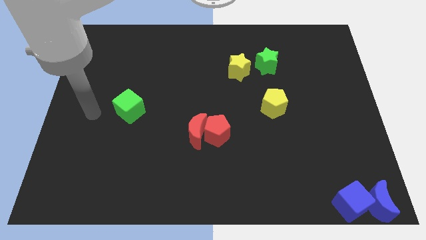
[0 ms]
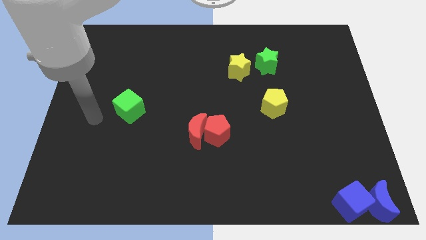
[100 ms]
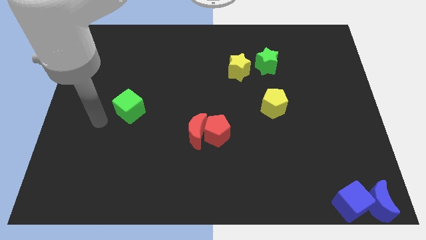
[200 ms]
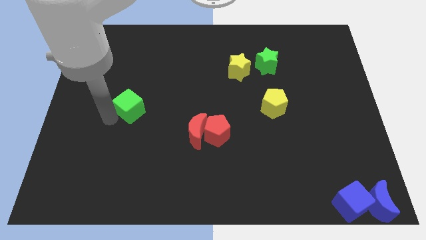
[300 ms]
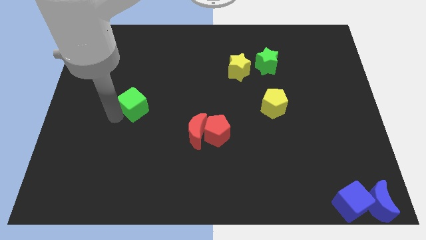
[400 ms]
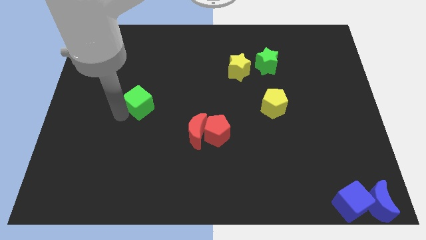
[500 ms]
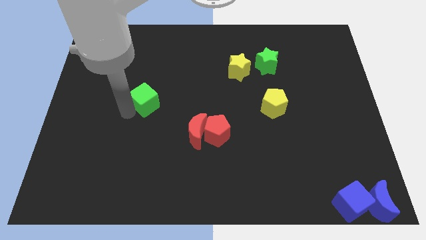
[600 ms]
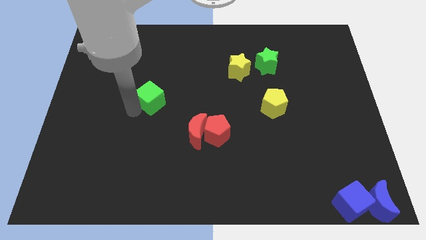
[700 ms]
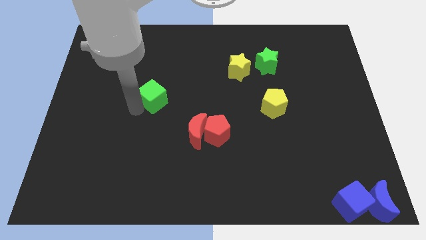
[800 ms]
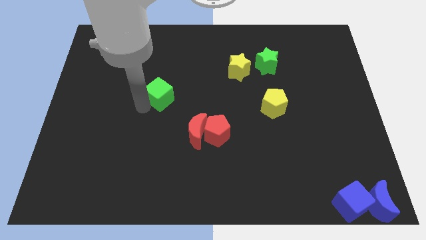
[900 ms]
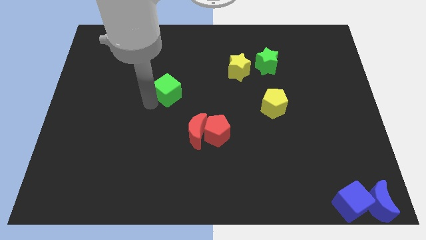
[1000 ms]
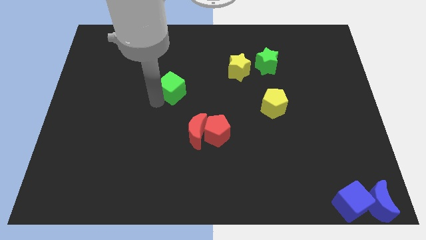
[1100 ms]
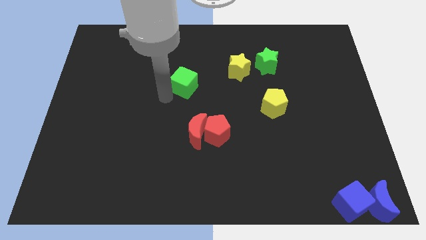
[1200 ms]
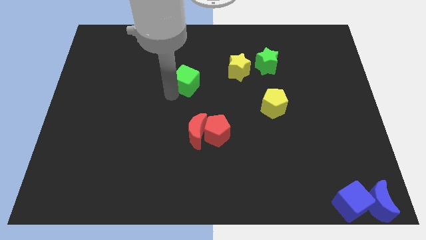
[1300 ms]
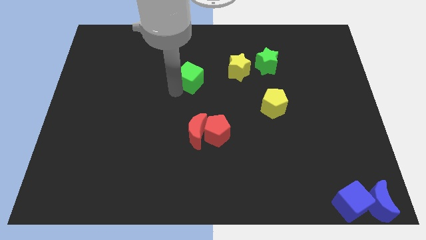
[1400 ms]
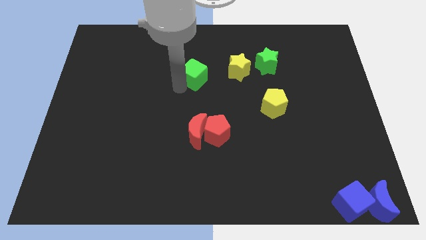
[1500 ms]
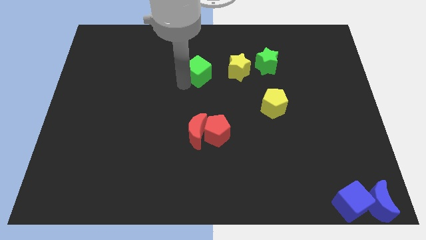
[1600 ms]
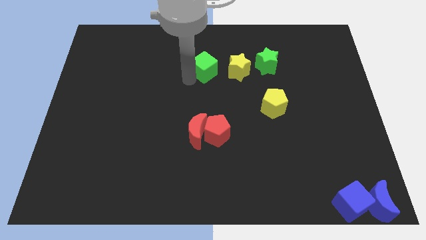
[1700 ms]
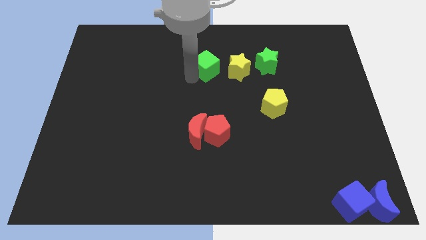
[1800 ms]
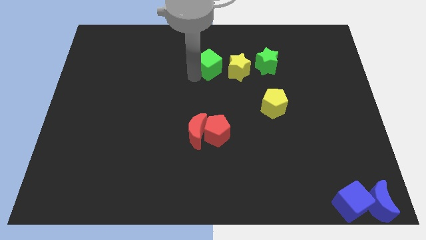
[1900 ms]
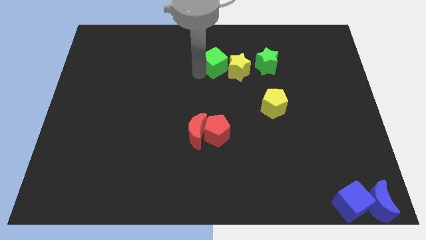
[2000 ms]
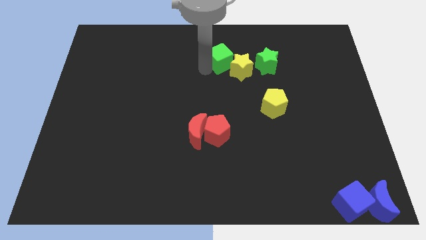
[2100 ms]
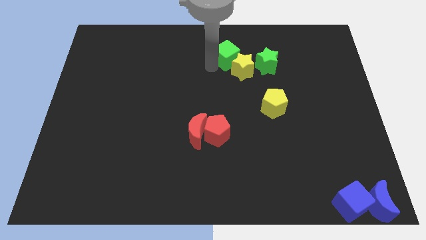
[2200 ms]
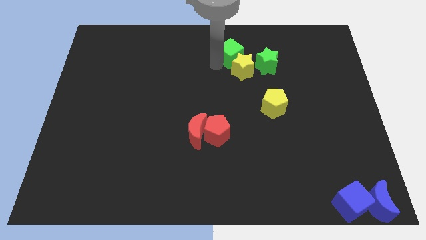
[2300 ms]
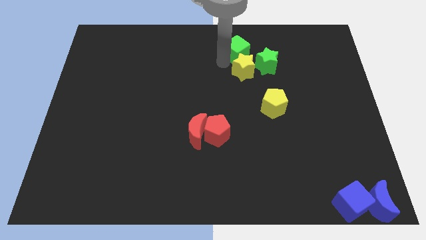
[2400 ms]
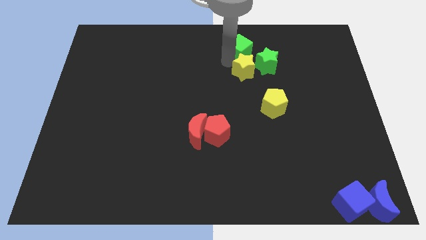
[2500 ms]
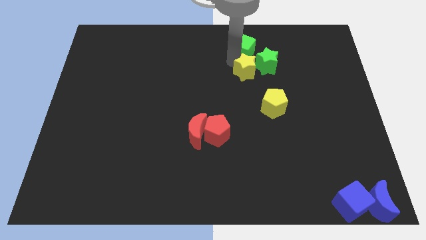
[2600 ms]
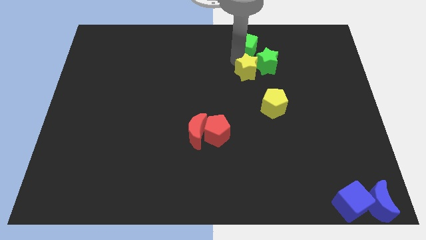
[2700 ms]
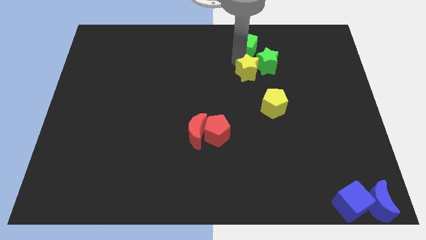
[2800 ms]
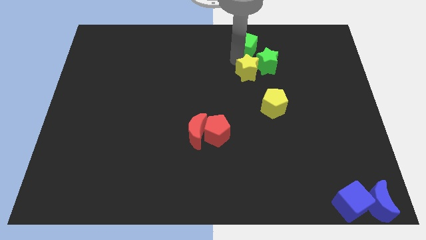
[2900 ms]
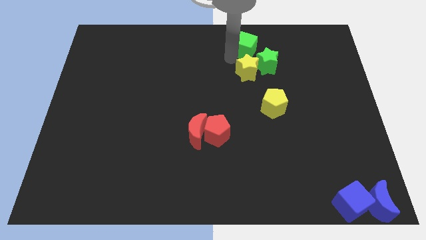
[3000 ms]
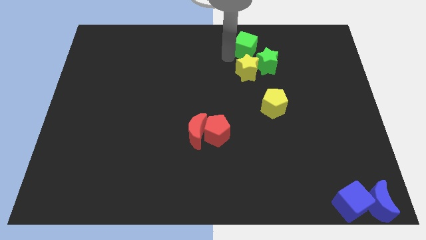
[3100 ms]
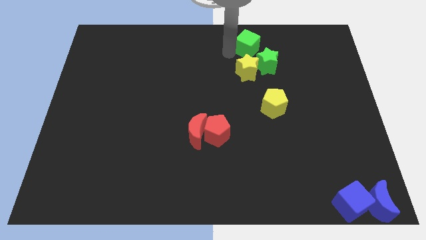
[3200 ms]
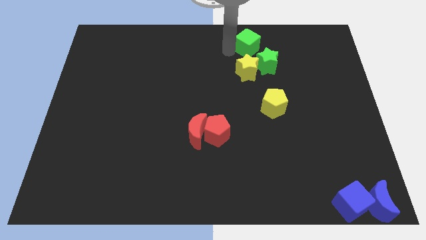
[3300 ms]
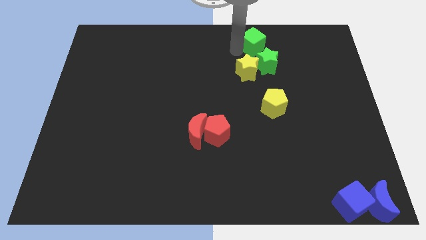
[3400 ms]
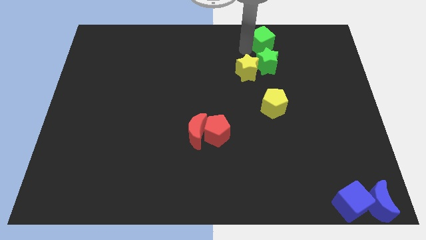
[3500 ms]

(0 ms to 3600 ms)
push green cube above green star

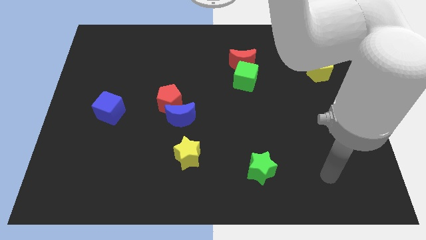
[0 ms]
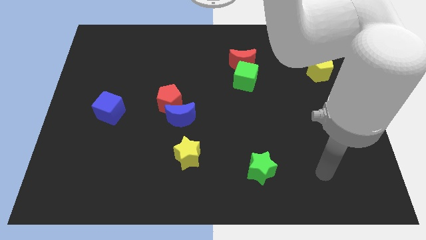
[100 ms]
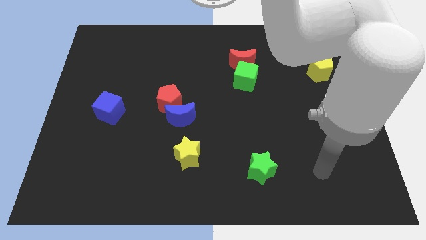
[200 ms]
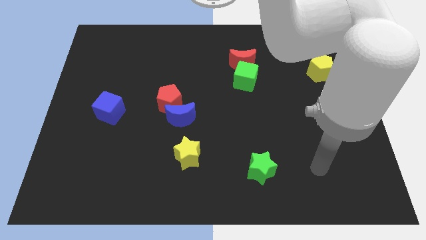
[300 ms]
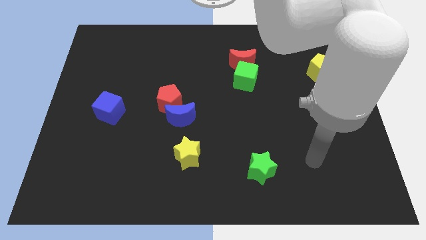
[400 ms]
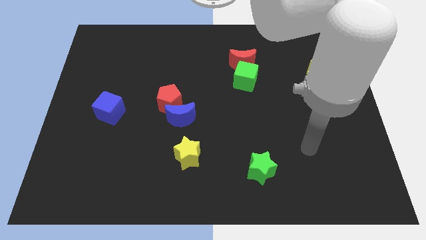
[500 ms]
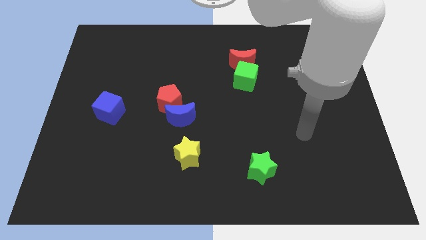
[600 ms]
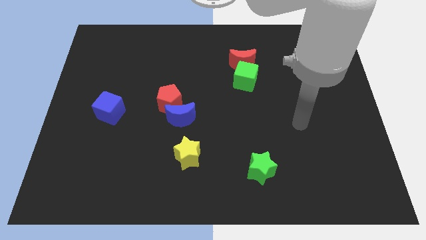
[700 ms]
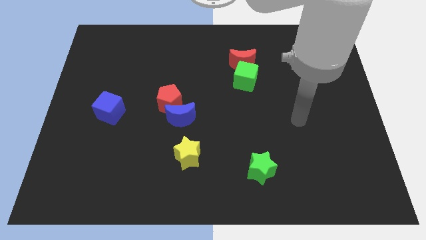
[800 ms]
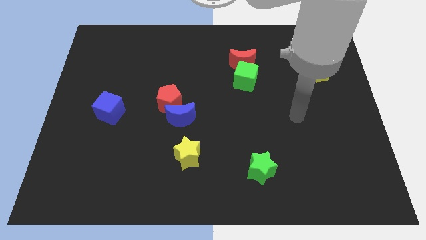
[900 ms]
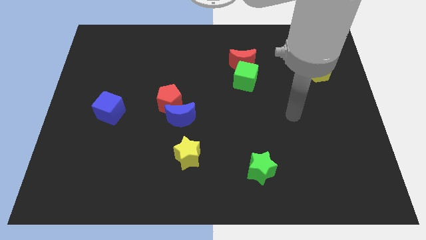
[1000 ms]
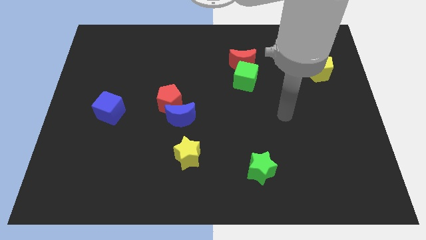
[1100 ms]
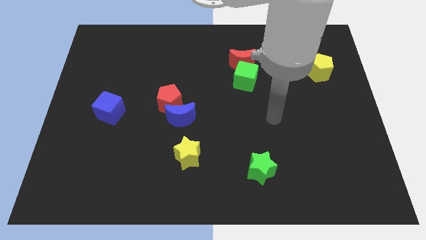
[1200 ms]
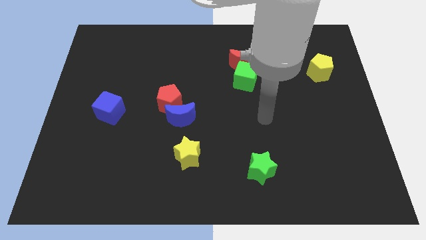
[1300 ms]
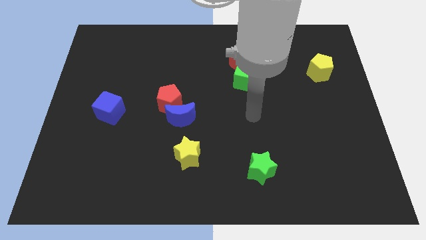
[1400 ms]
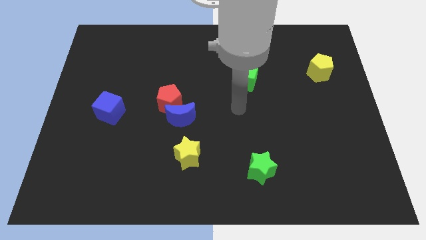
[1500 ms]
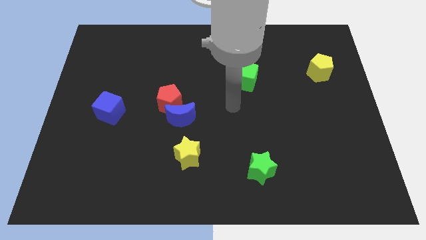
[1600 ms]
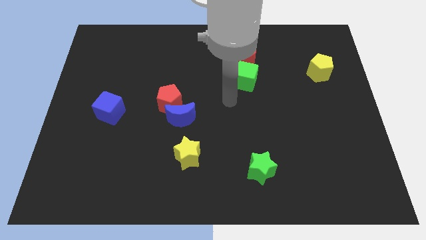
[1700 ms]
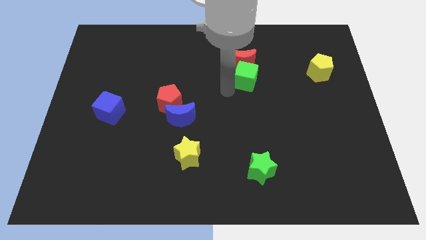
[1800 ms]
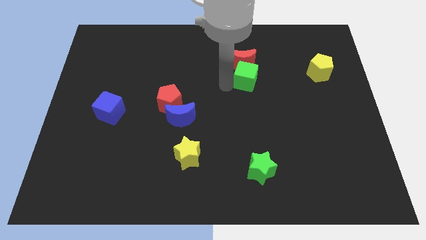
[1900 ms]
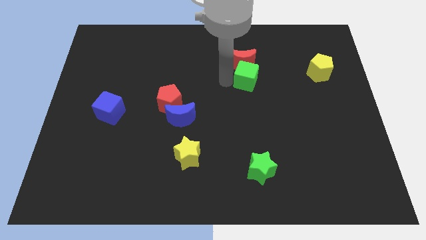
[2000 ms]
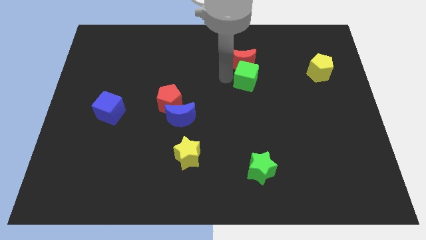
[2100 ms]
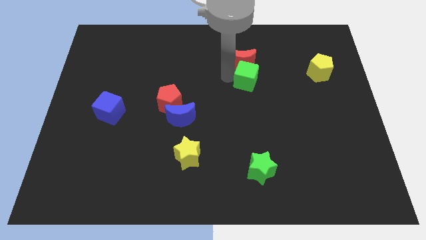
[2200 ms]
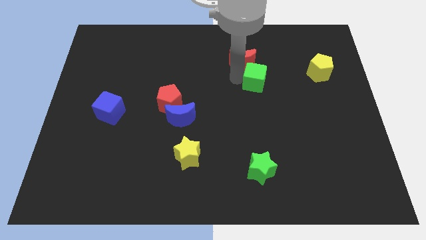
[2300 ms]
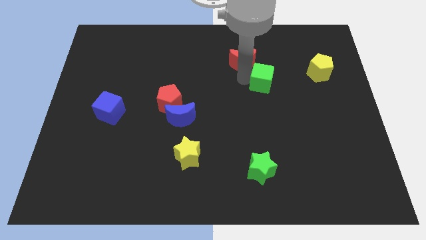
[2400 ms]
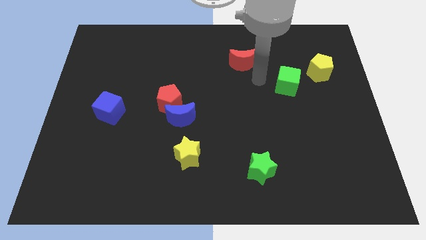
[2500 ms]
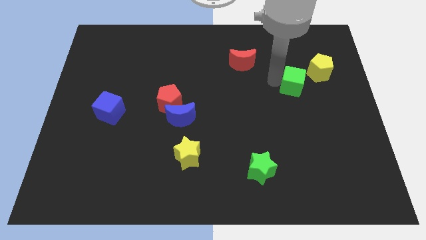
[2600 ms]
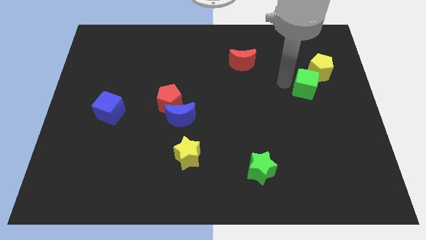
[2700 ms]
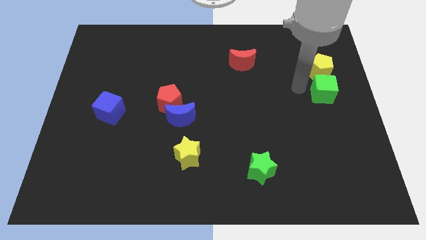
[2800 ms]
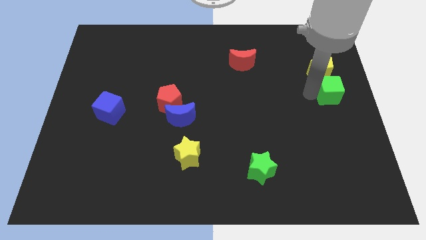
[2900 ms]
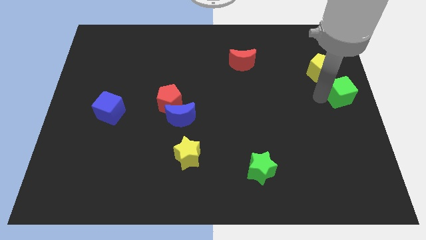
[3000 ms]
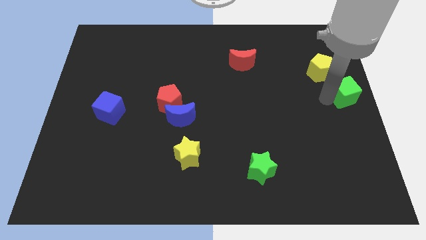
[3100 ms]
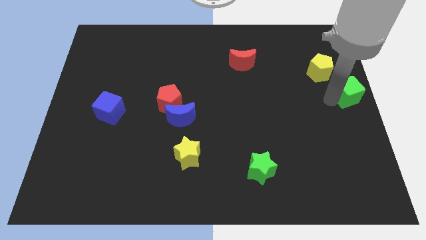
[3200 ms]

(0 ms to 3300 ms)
place the green cube at the bottom right of yellow pentagon

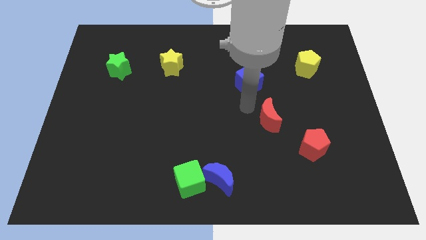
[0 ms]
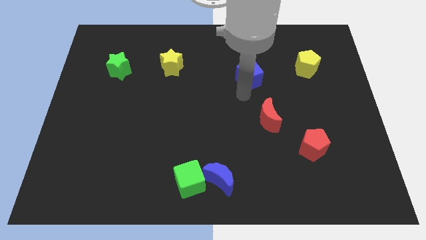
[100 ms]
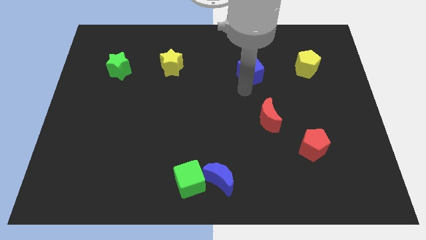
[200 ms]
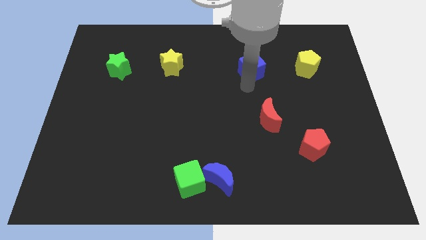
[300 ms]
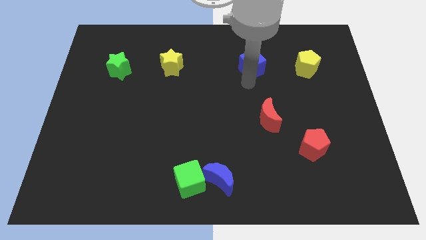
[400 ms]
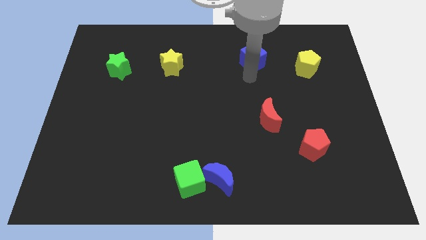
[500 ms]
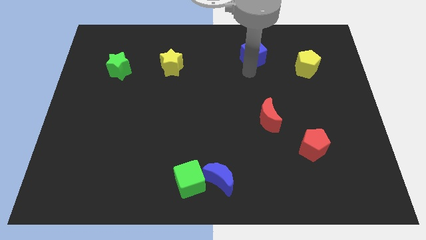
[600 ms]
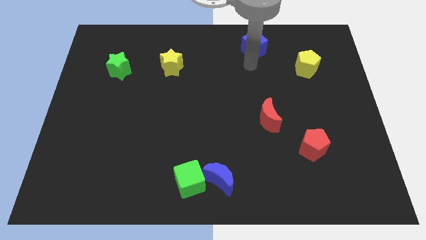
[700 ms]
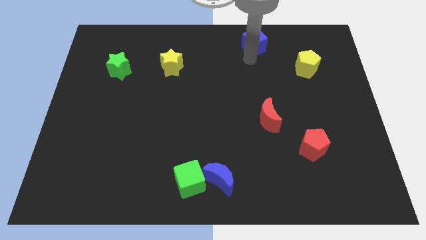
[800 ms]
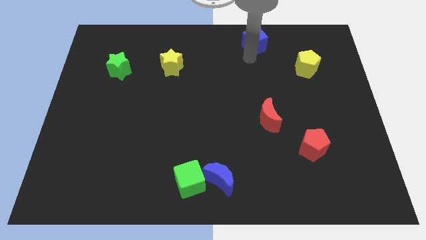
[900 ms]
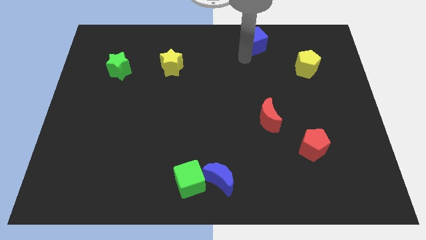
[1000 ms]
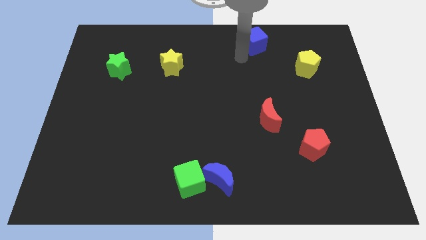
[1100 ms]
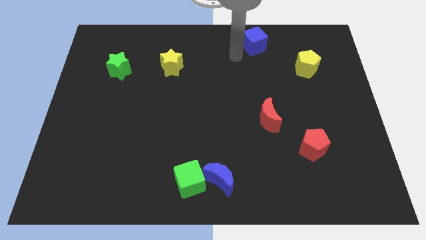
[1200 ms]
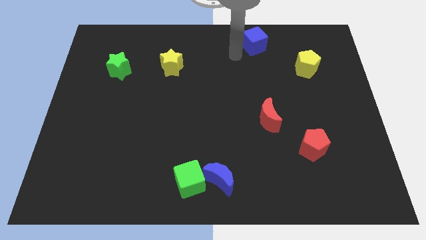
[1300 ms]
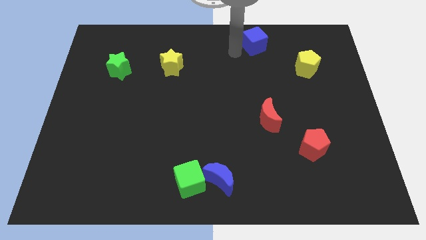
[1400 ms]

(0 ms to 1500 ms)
move the blue cube to the top

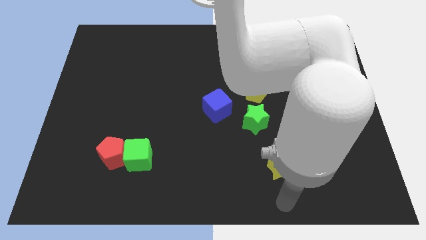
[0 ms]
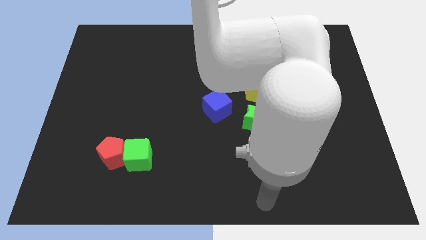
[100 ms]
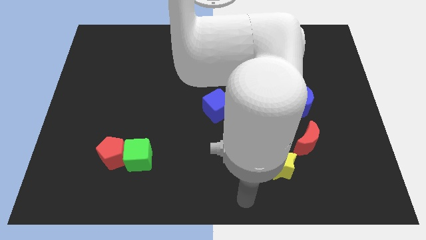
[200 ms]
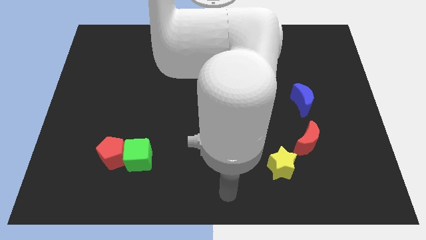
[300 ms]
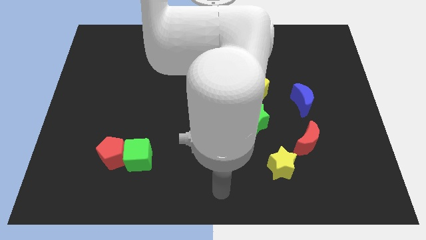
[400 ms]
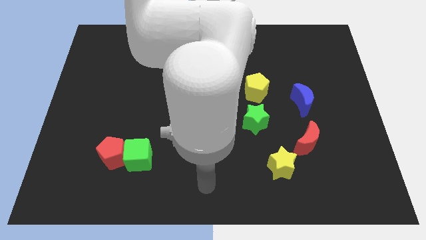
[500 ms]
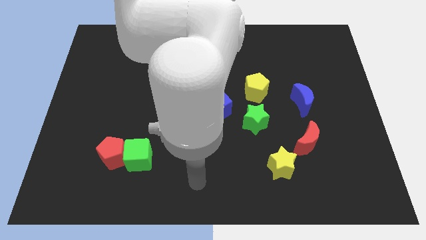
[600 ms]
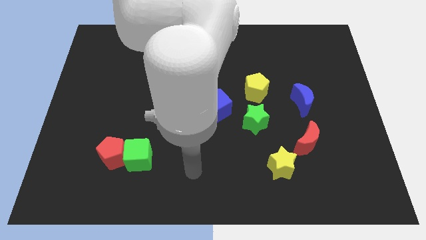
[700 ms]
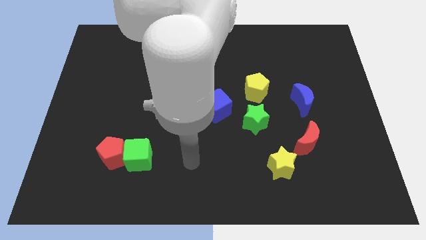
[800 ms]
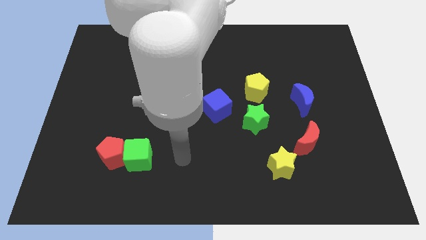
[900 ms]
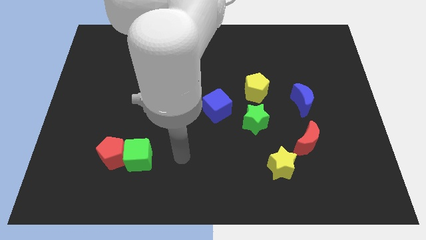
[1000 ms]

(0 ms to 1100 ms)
go and place your hand at the right of the green cube
